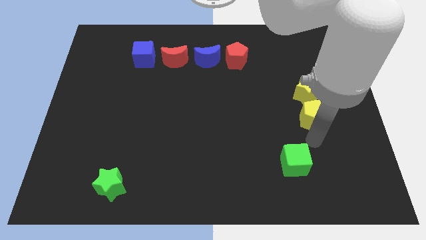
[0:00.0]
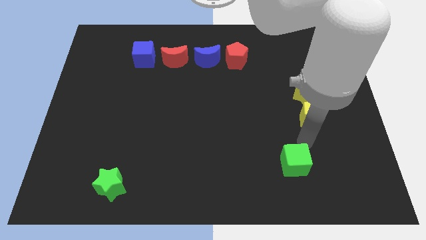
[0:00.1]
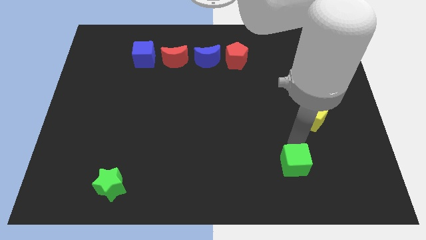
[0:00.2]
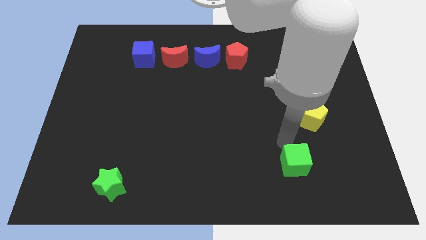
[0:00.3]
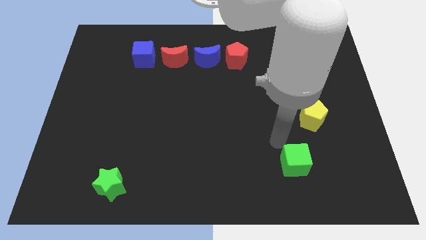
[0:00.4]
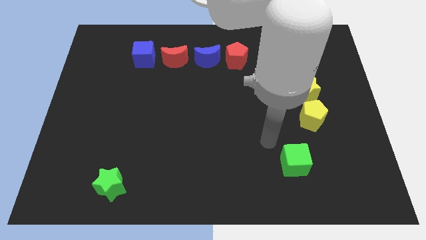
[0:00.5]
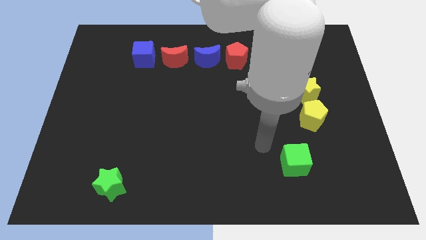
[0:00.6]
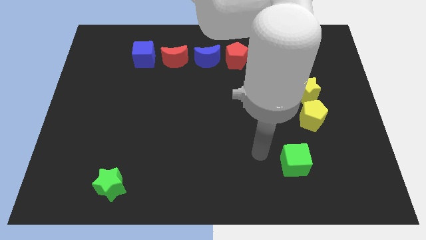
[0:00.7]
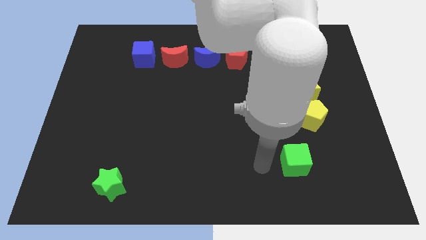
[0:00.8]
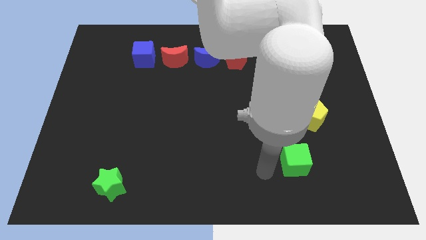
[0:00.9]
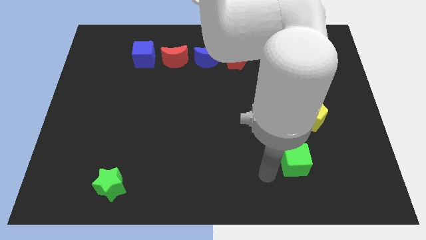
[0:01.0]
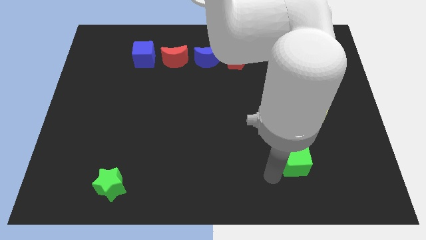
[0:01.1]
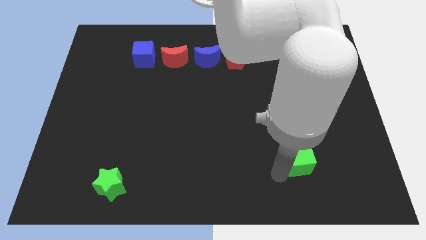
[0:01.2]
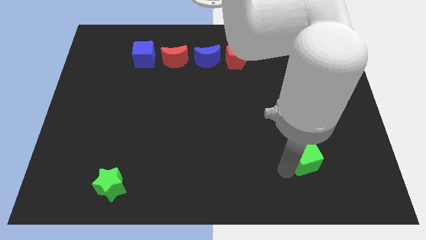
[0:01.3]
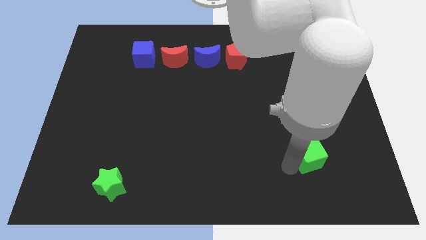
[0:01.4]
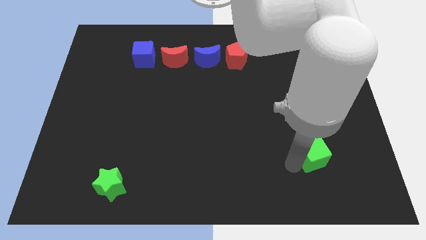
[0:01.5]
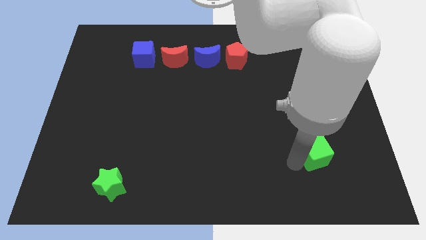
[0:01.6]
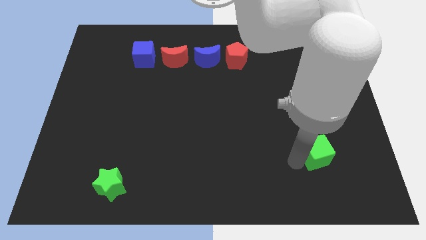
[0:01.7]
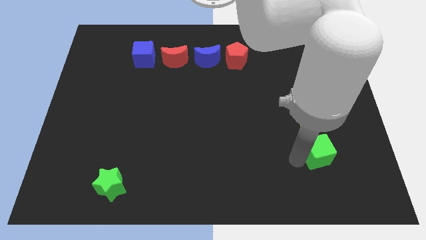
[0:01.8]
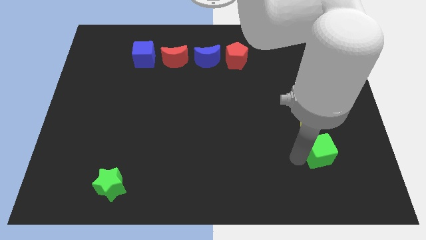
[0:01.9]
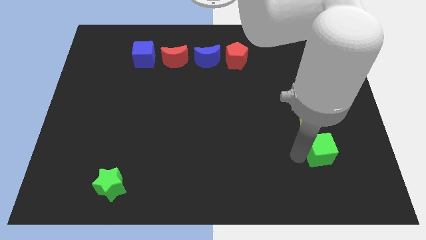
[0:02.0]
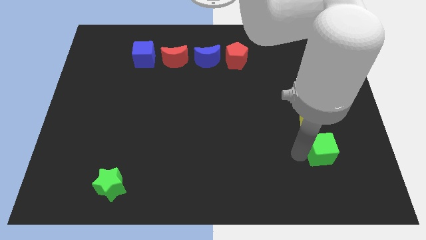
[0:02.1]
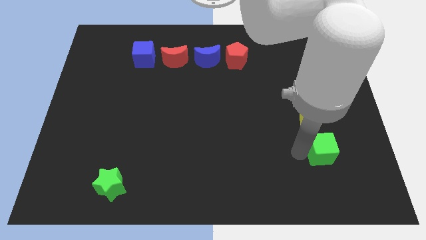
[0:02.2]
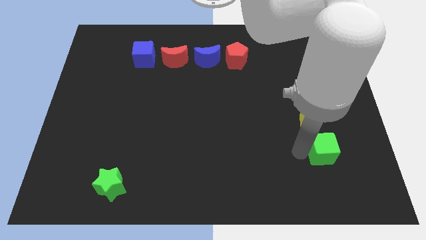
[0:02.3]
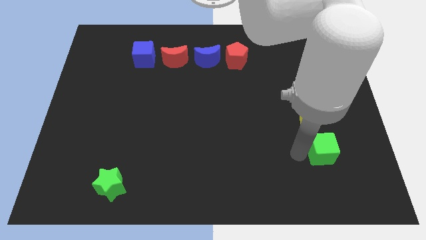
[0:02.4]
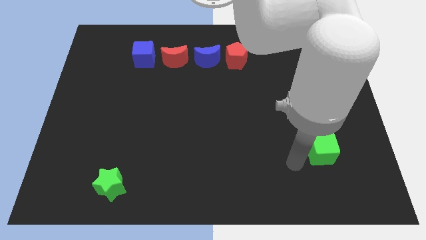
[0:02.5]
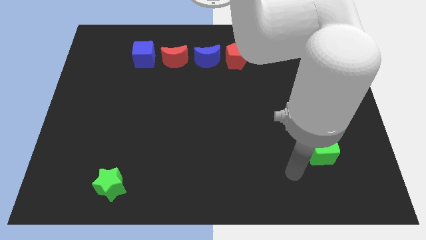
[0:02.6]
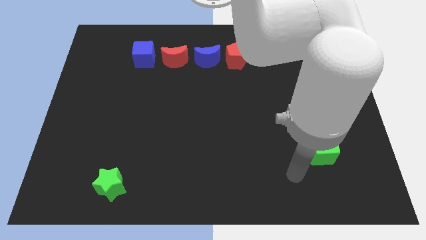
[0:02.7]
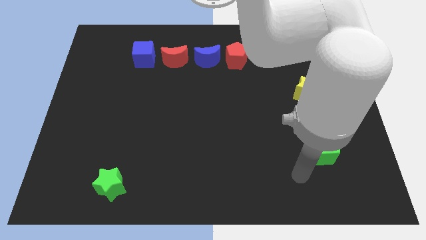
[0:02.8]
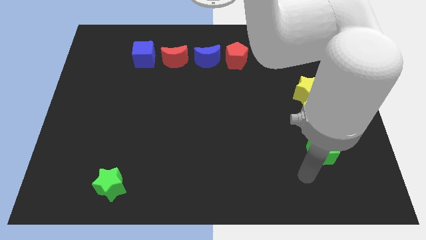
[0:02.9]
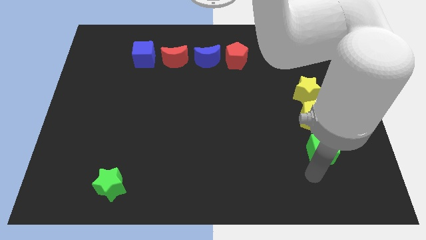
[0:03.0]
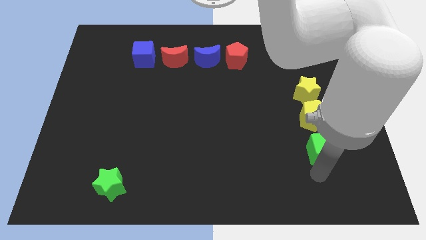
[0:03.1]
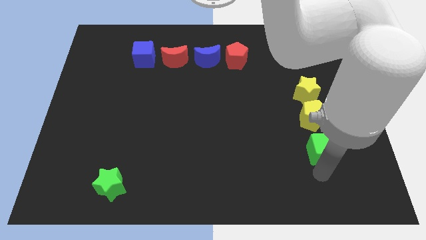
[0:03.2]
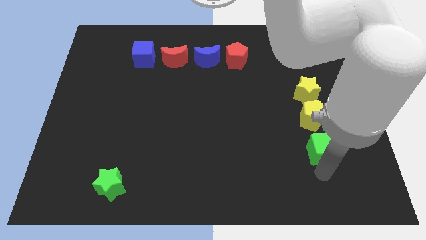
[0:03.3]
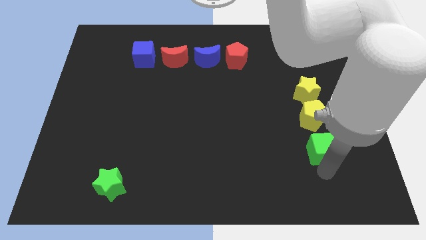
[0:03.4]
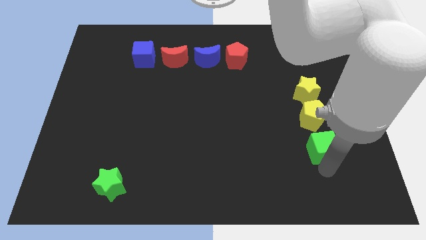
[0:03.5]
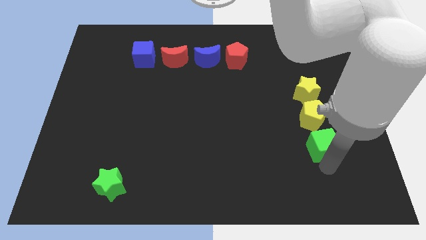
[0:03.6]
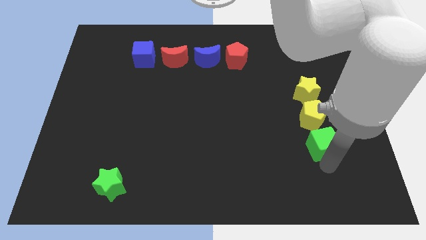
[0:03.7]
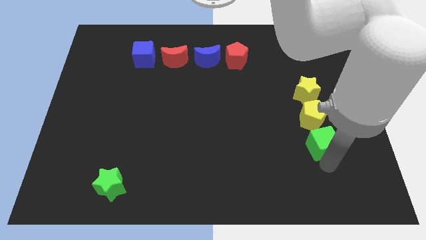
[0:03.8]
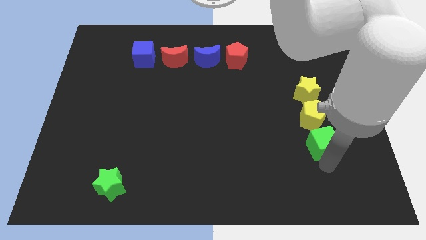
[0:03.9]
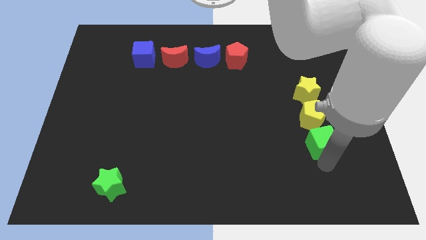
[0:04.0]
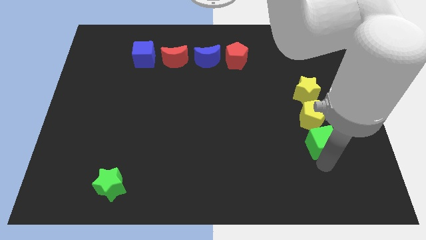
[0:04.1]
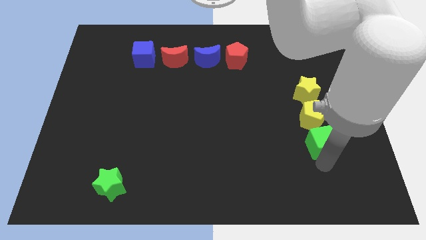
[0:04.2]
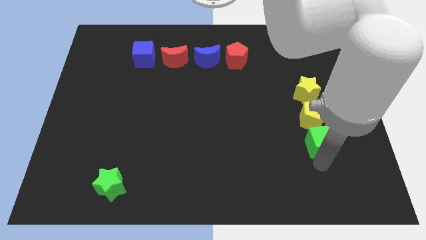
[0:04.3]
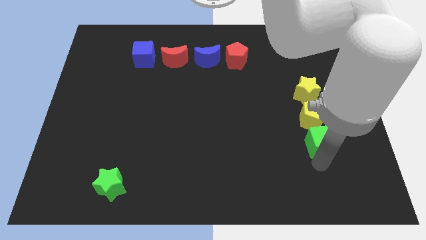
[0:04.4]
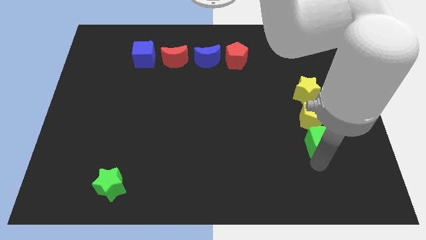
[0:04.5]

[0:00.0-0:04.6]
place the green cube below the yellow pentagon

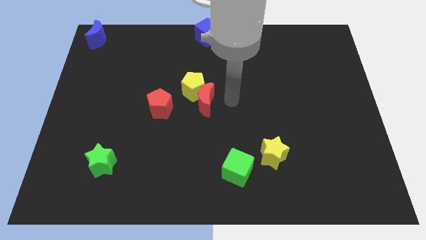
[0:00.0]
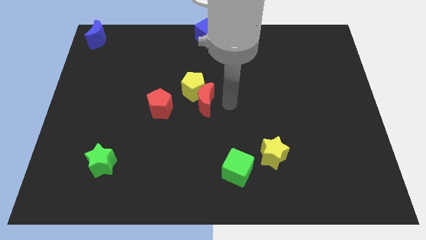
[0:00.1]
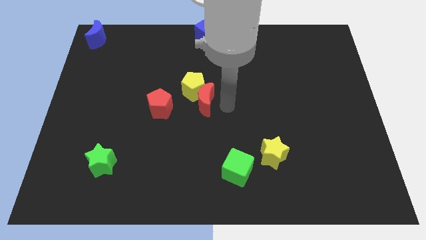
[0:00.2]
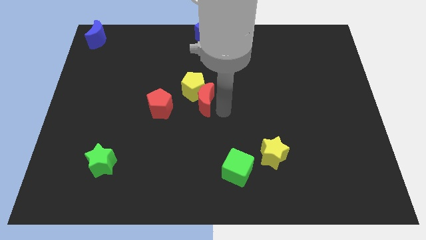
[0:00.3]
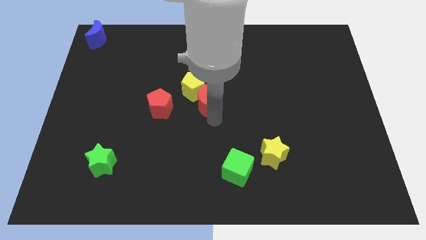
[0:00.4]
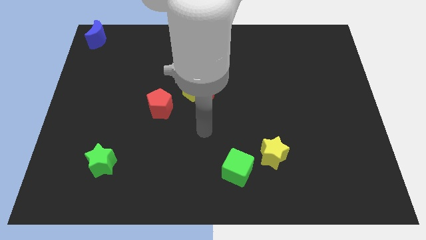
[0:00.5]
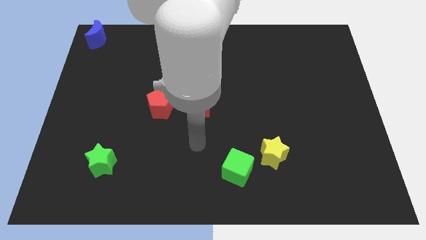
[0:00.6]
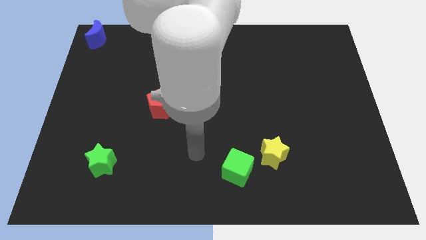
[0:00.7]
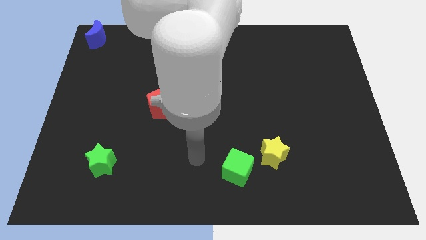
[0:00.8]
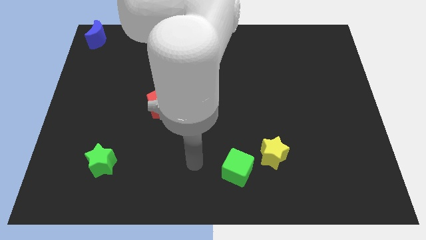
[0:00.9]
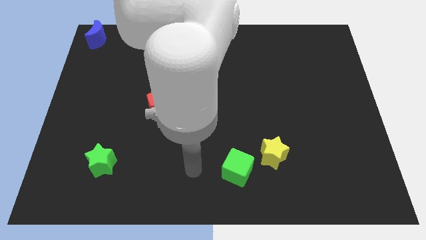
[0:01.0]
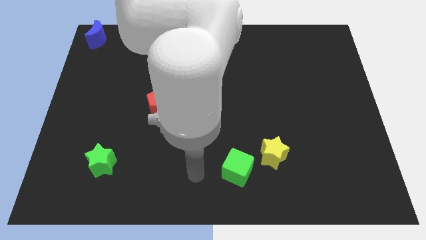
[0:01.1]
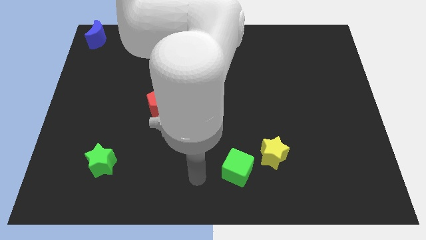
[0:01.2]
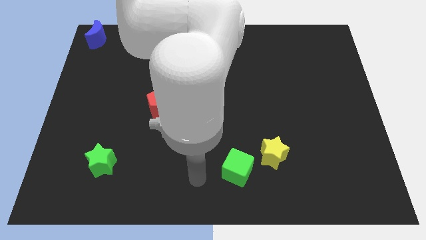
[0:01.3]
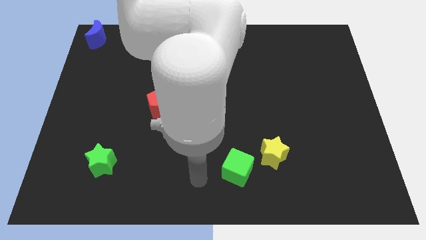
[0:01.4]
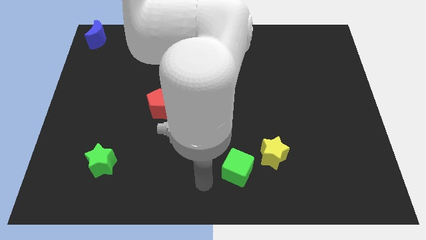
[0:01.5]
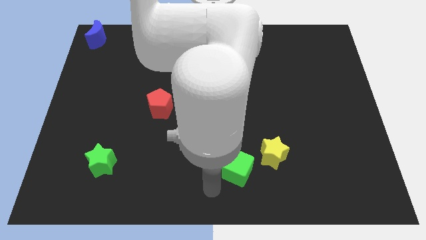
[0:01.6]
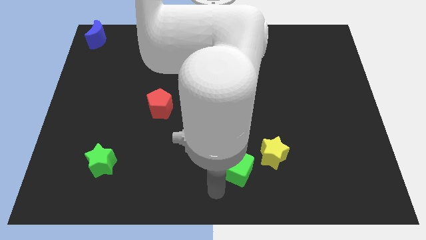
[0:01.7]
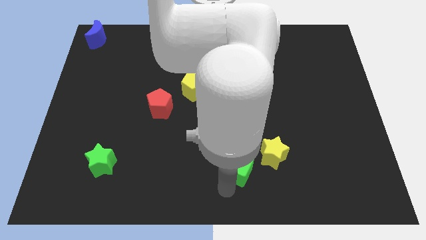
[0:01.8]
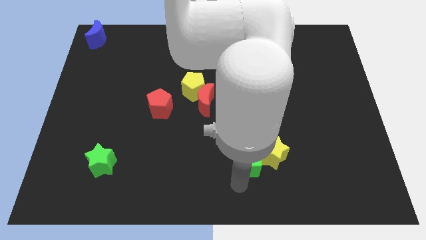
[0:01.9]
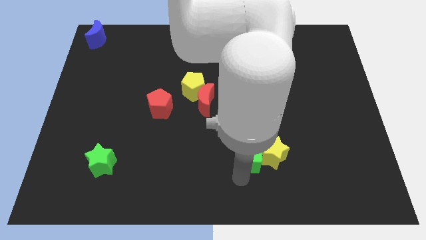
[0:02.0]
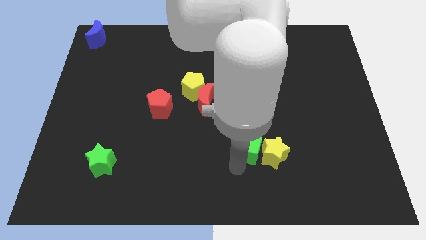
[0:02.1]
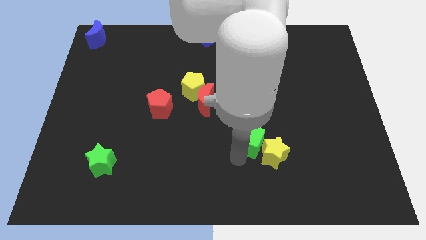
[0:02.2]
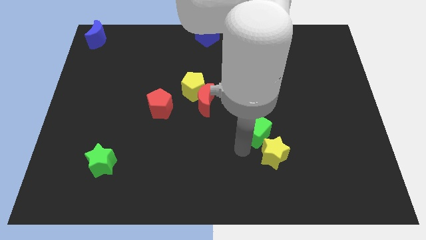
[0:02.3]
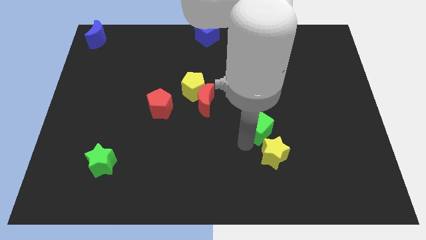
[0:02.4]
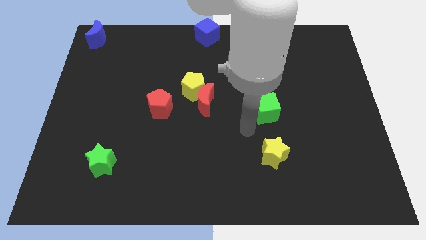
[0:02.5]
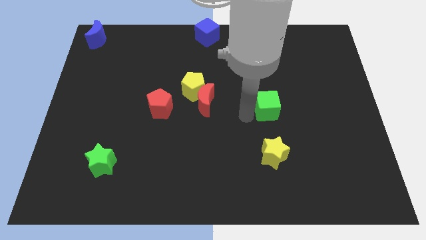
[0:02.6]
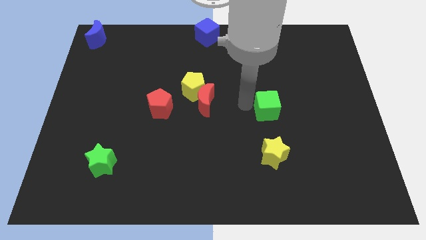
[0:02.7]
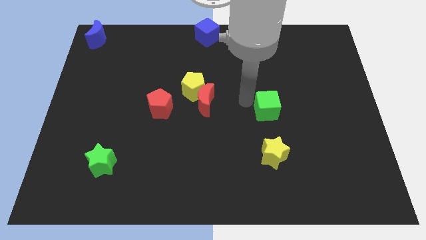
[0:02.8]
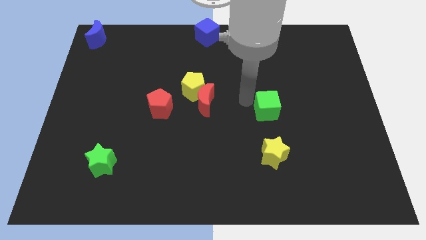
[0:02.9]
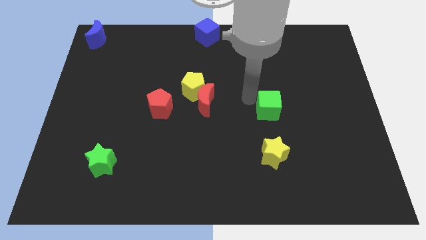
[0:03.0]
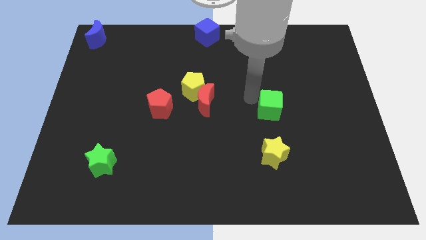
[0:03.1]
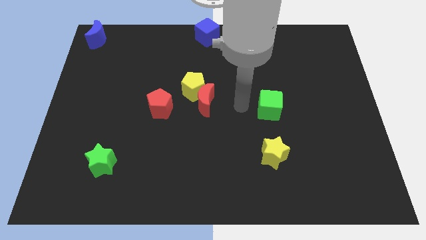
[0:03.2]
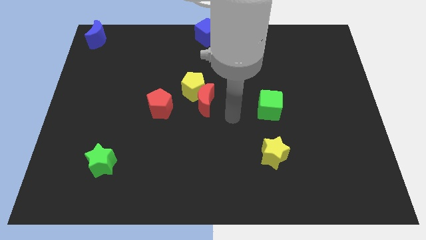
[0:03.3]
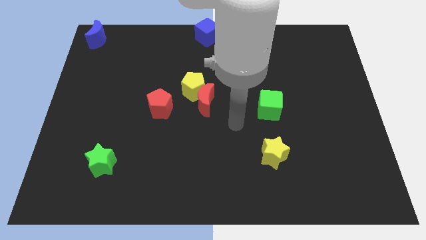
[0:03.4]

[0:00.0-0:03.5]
place the green cube on the top of the yellow star

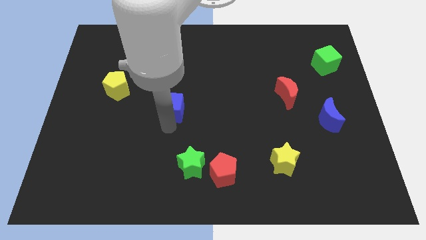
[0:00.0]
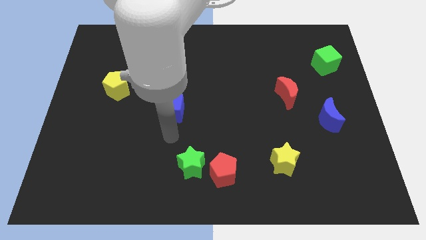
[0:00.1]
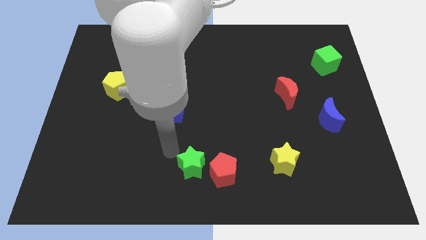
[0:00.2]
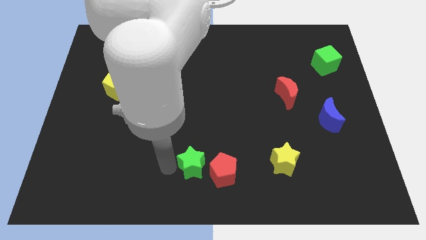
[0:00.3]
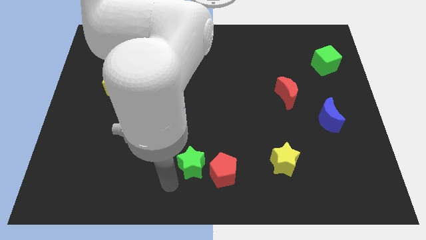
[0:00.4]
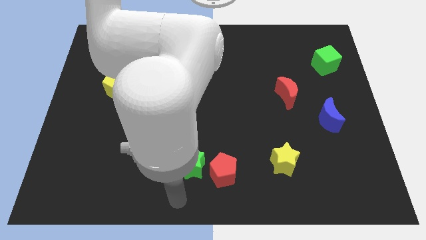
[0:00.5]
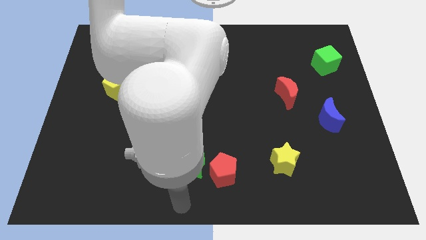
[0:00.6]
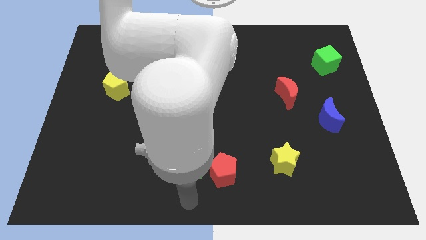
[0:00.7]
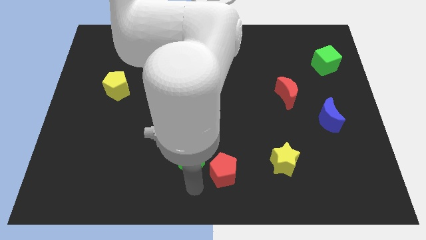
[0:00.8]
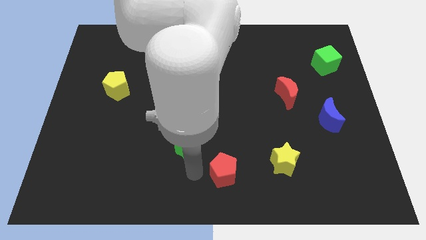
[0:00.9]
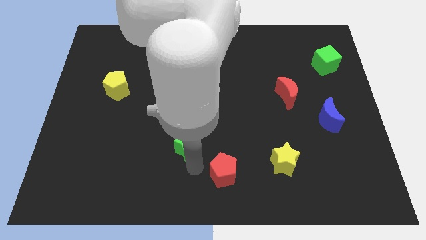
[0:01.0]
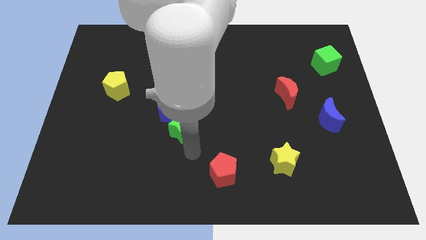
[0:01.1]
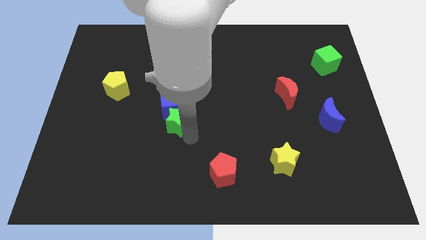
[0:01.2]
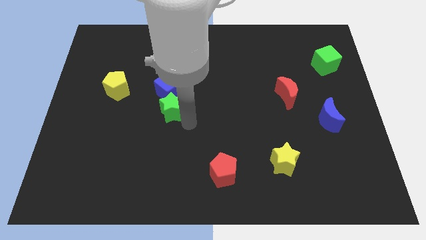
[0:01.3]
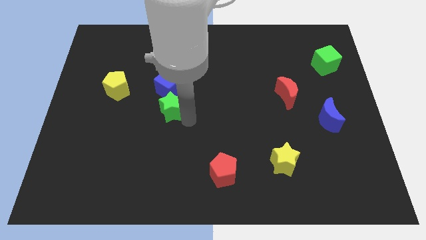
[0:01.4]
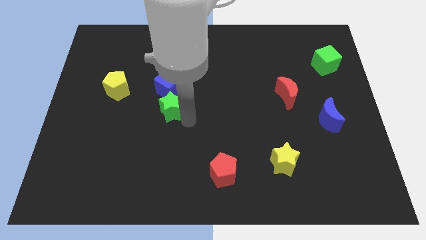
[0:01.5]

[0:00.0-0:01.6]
push the green star below into the blue cube
